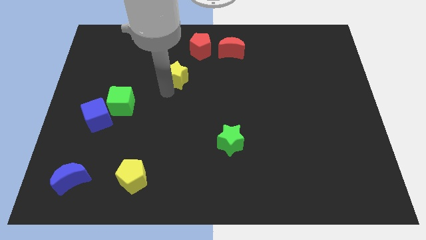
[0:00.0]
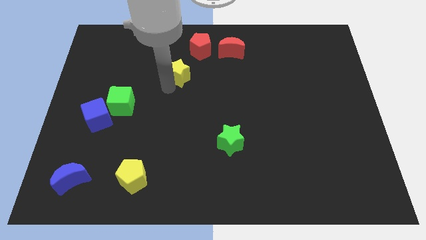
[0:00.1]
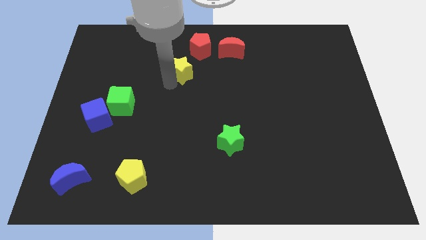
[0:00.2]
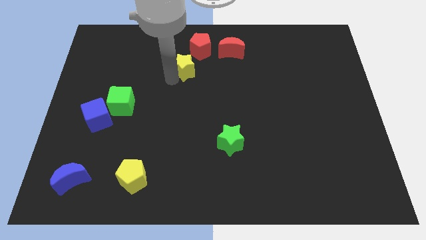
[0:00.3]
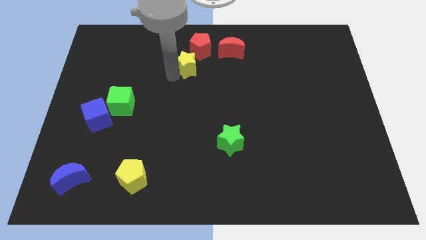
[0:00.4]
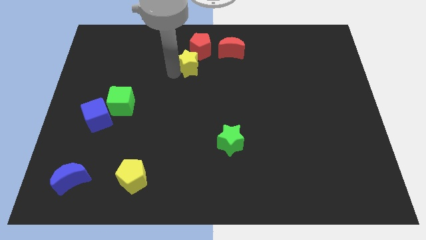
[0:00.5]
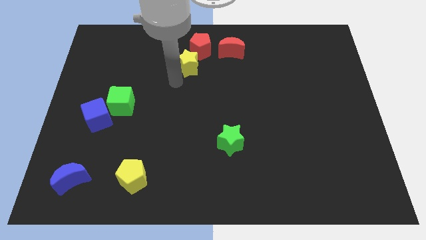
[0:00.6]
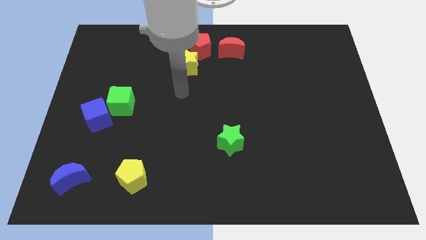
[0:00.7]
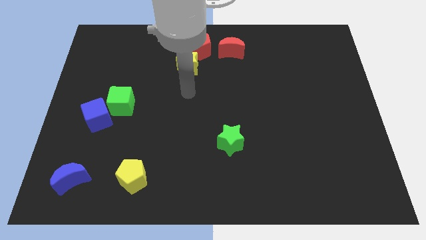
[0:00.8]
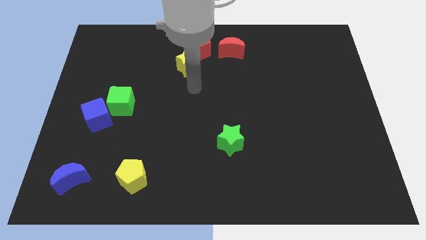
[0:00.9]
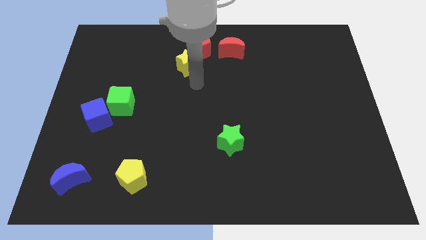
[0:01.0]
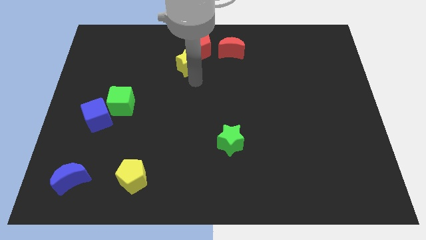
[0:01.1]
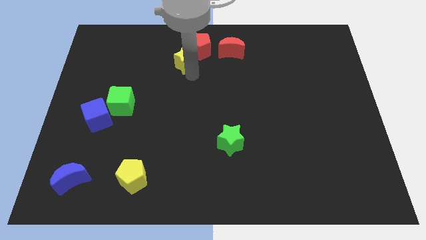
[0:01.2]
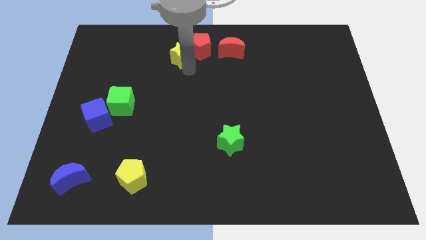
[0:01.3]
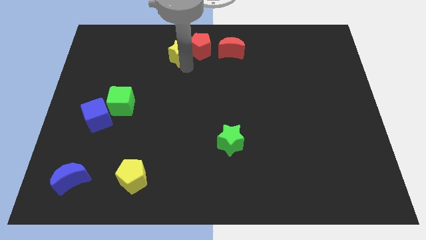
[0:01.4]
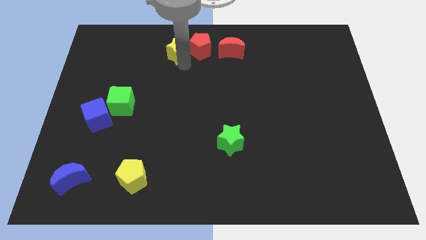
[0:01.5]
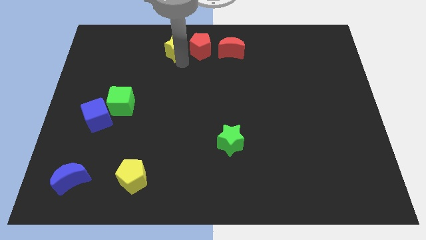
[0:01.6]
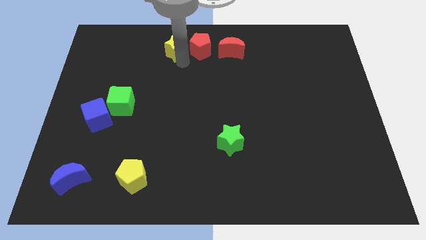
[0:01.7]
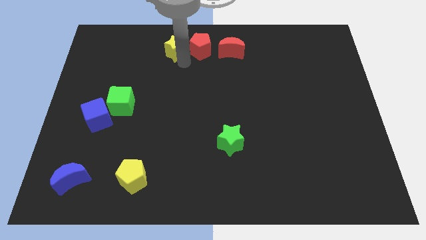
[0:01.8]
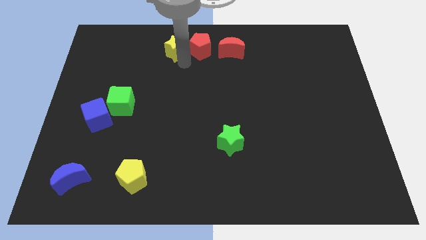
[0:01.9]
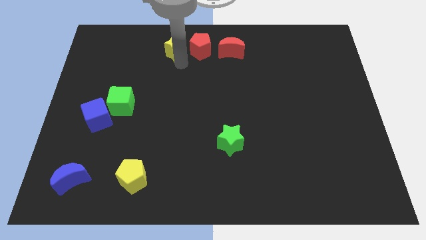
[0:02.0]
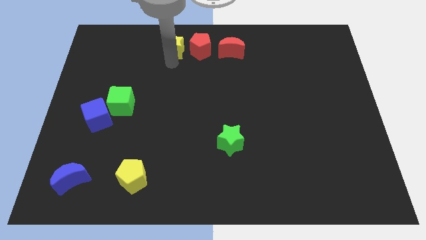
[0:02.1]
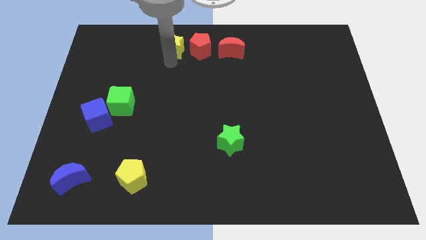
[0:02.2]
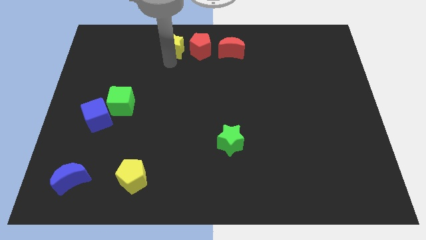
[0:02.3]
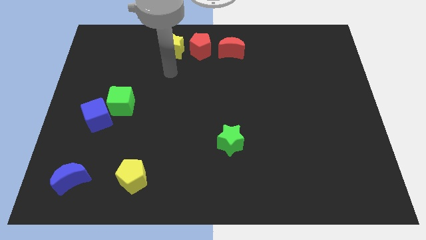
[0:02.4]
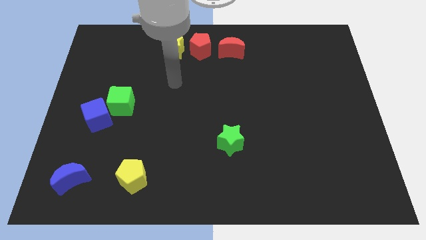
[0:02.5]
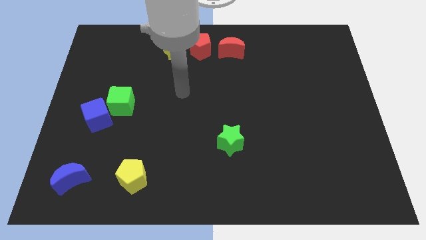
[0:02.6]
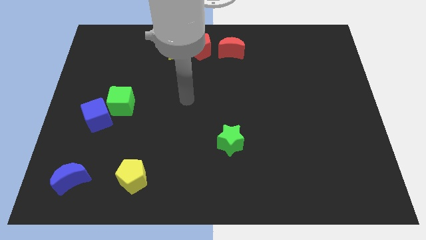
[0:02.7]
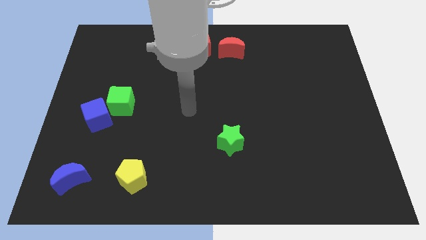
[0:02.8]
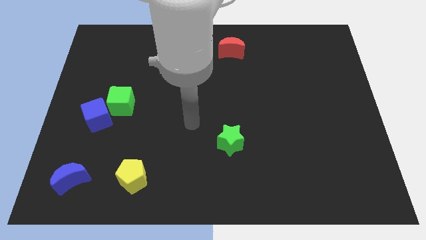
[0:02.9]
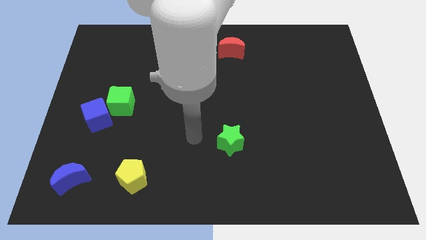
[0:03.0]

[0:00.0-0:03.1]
put the yellow star on the left side of the red pentagon

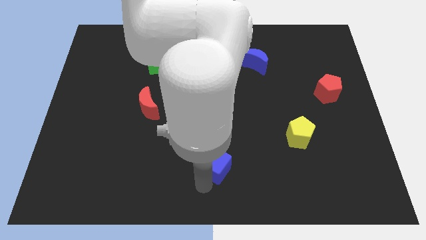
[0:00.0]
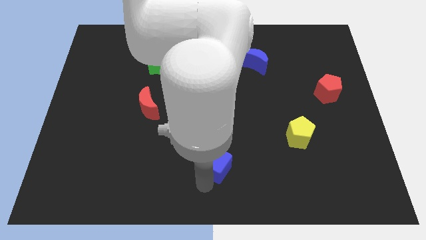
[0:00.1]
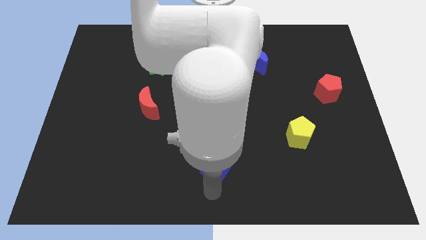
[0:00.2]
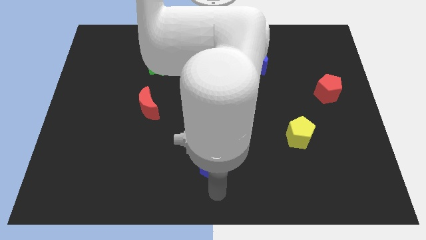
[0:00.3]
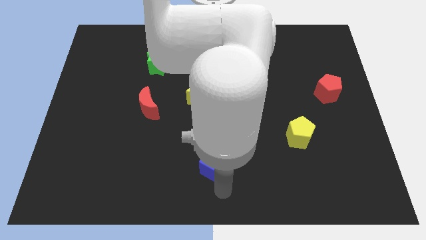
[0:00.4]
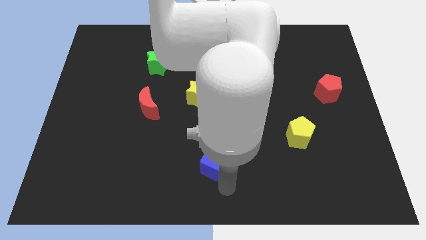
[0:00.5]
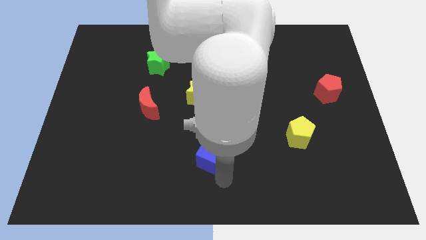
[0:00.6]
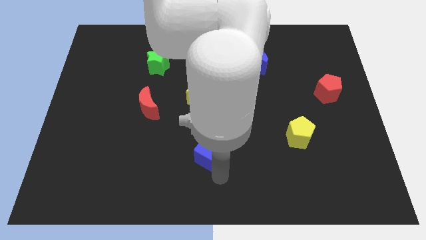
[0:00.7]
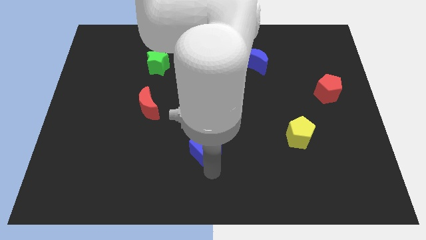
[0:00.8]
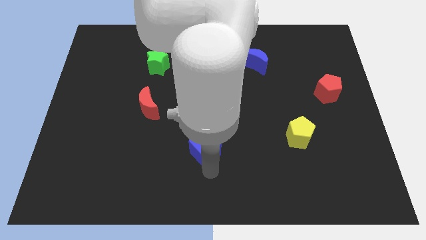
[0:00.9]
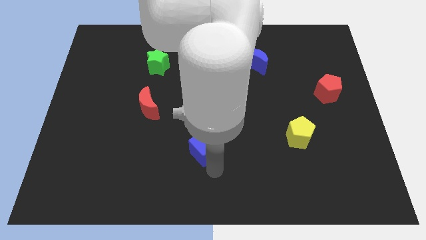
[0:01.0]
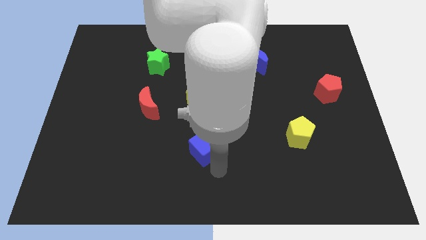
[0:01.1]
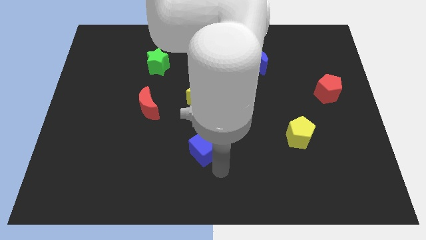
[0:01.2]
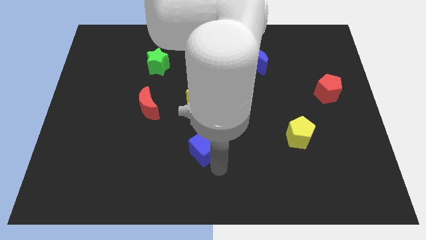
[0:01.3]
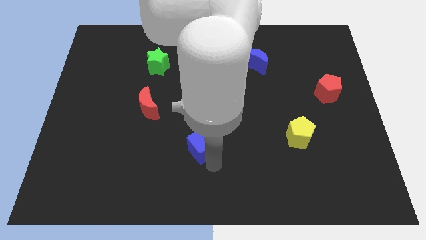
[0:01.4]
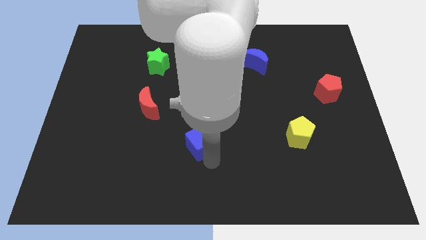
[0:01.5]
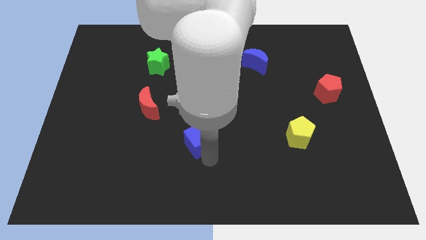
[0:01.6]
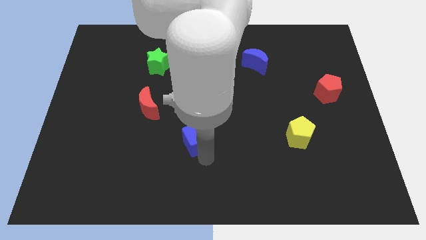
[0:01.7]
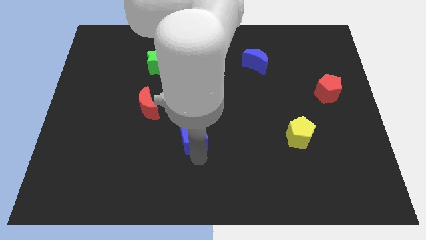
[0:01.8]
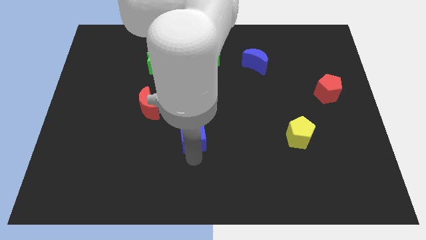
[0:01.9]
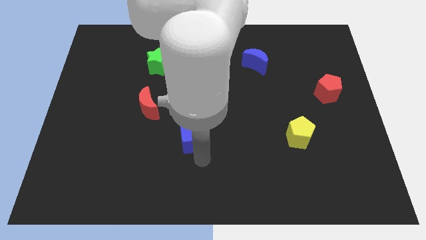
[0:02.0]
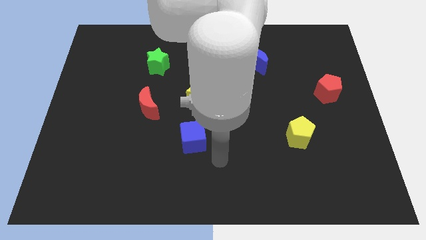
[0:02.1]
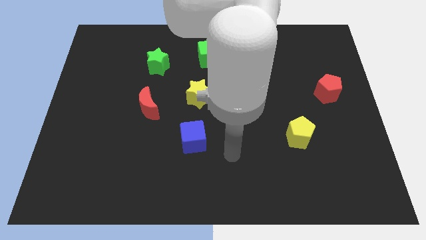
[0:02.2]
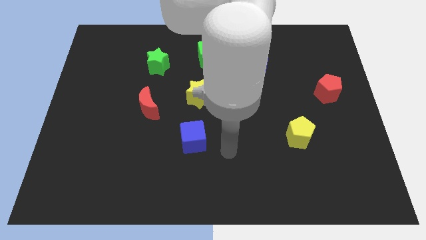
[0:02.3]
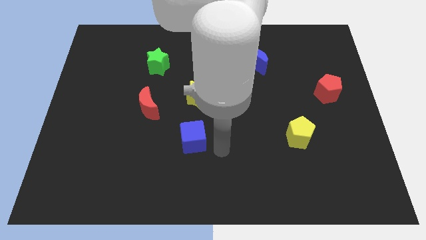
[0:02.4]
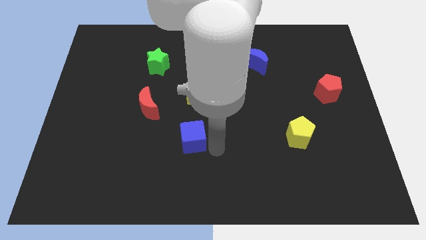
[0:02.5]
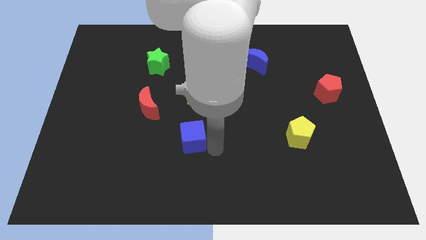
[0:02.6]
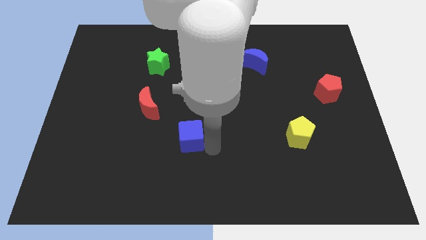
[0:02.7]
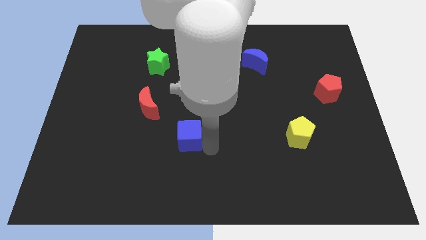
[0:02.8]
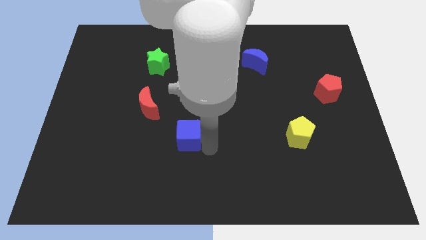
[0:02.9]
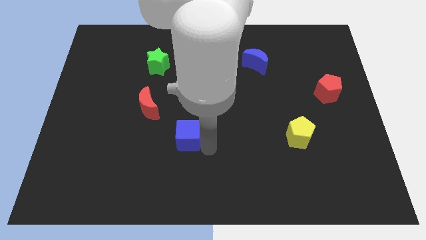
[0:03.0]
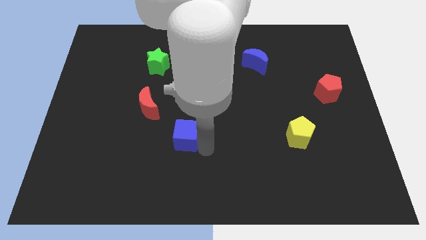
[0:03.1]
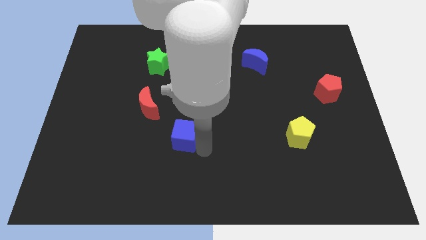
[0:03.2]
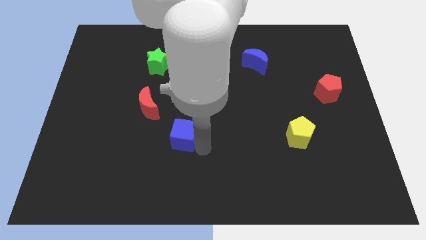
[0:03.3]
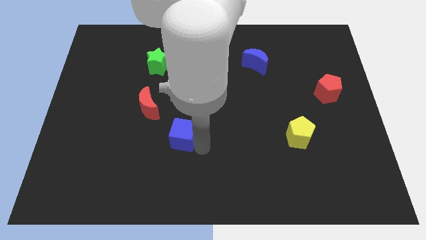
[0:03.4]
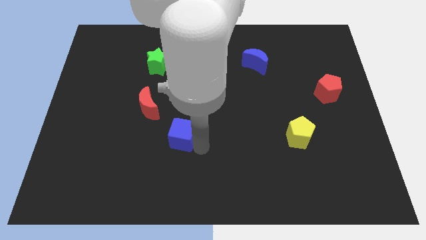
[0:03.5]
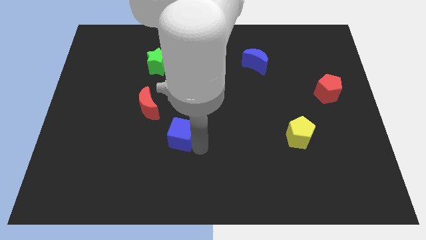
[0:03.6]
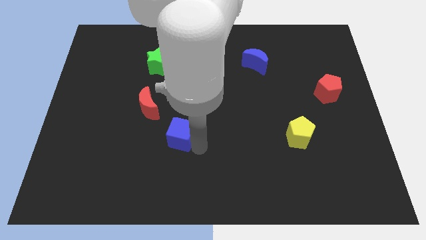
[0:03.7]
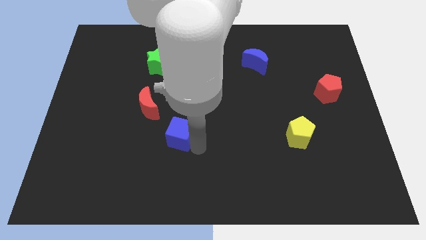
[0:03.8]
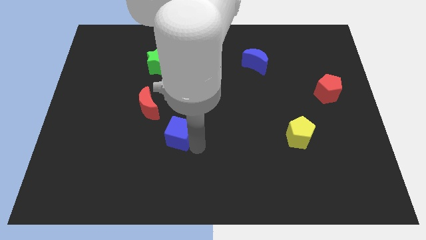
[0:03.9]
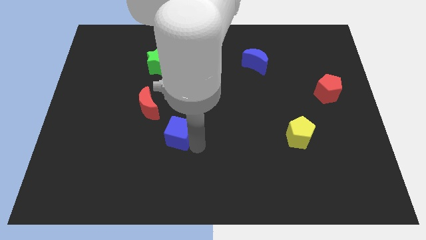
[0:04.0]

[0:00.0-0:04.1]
move the blue cube into the red crescent

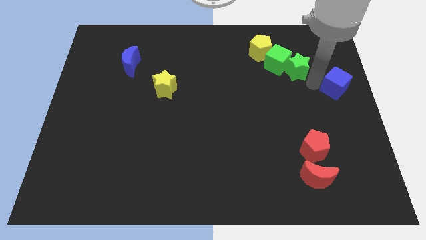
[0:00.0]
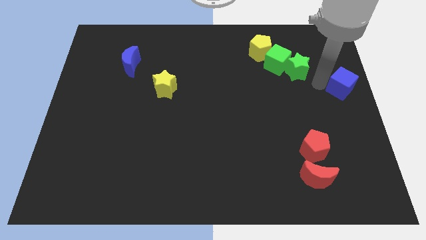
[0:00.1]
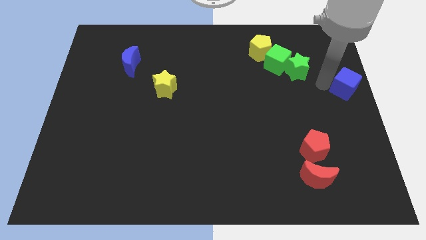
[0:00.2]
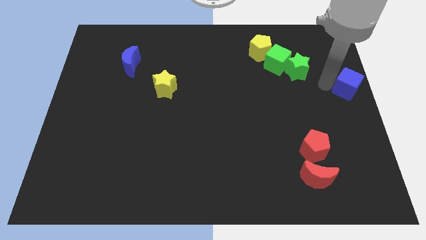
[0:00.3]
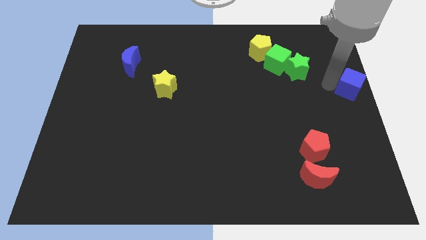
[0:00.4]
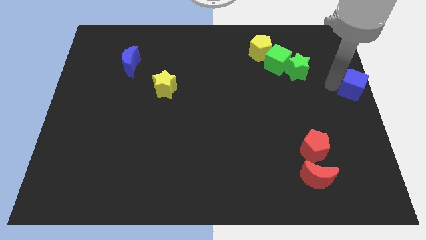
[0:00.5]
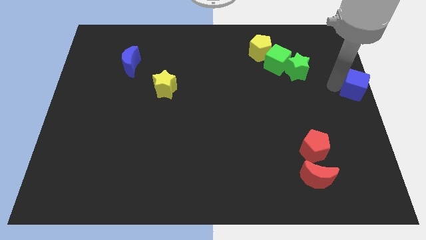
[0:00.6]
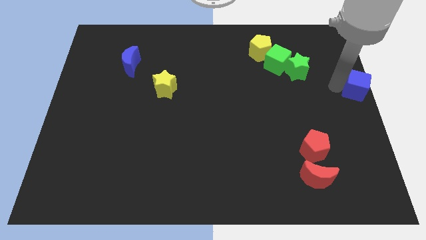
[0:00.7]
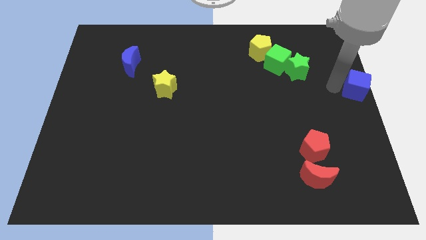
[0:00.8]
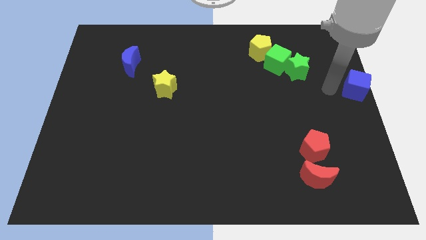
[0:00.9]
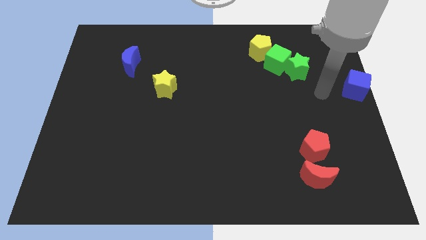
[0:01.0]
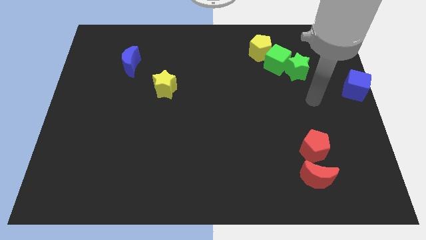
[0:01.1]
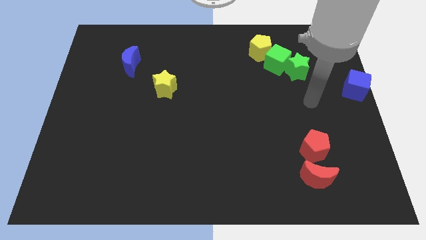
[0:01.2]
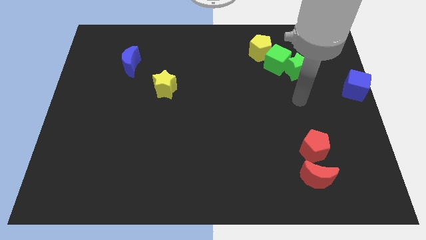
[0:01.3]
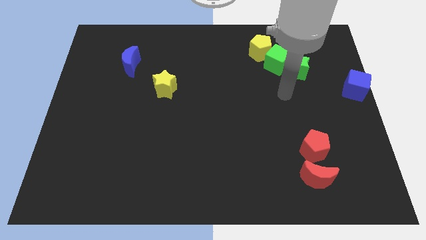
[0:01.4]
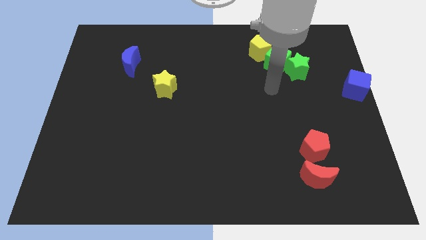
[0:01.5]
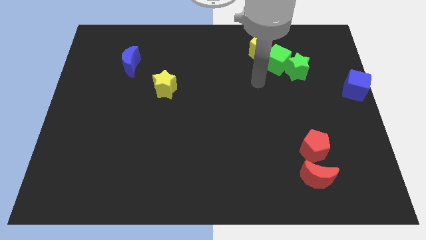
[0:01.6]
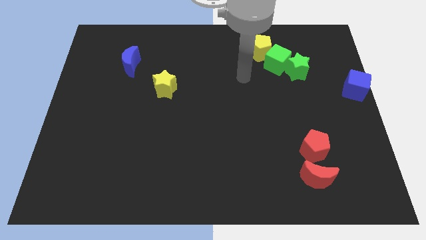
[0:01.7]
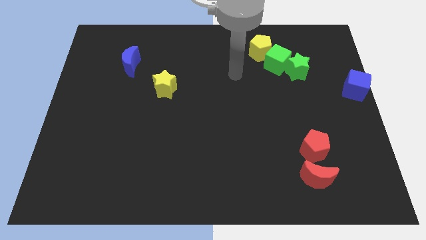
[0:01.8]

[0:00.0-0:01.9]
move the blue cube to the center right corner of the board
